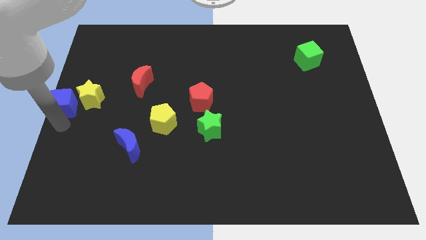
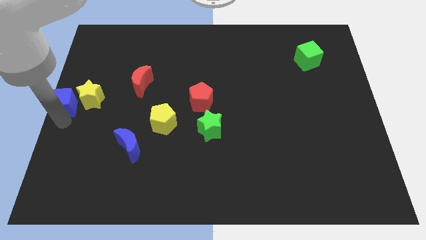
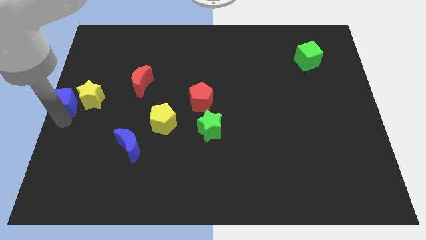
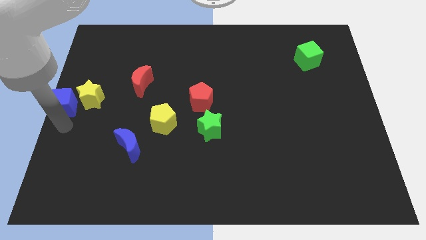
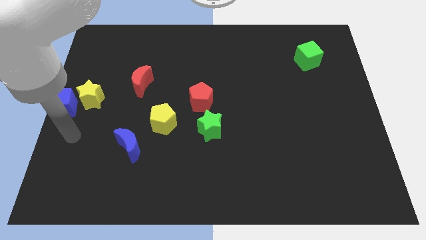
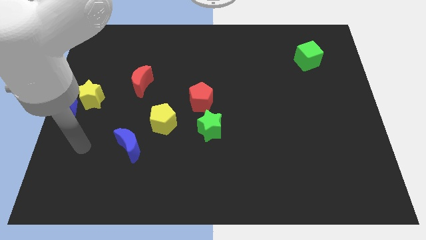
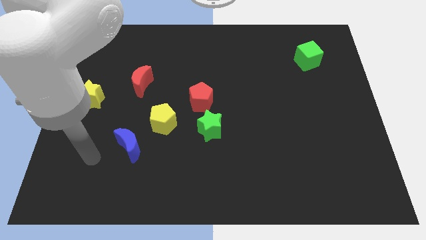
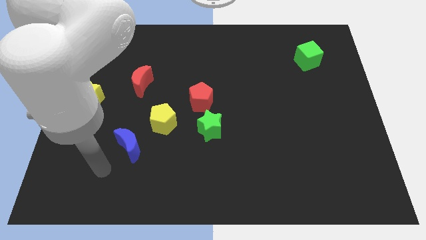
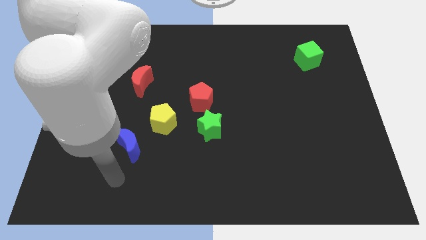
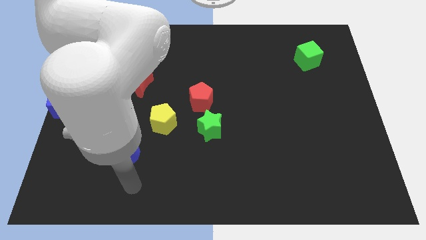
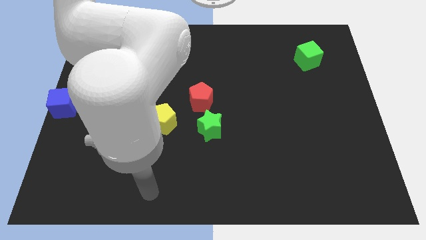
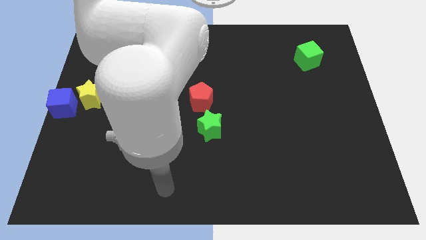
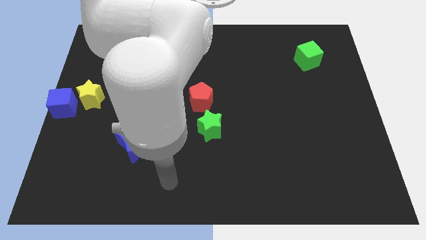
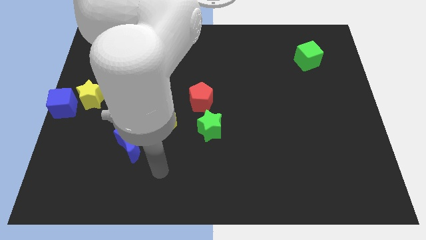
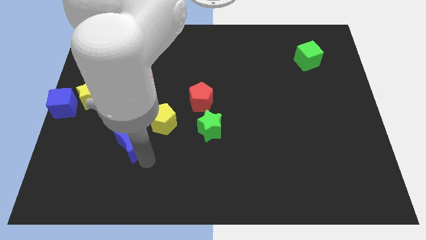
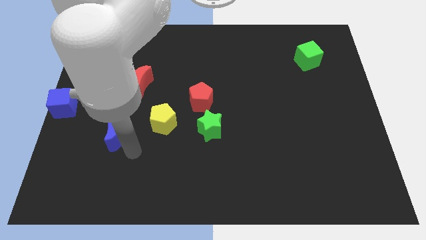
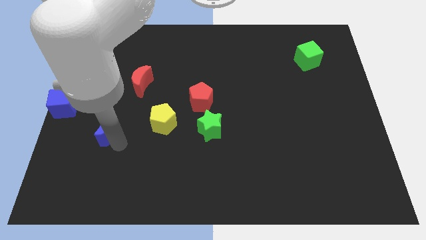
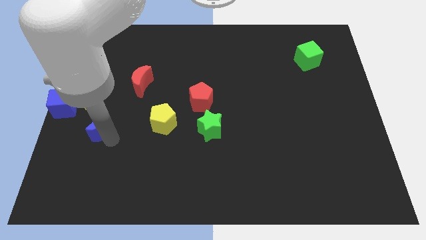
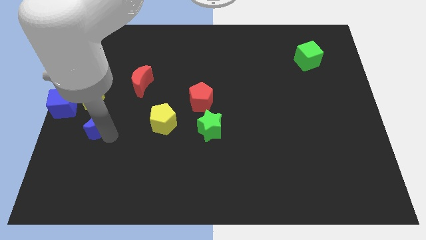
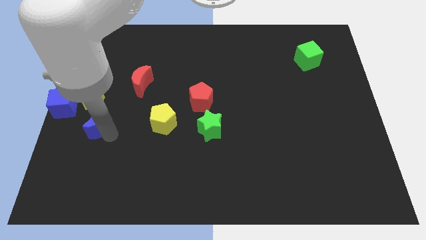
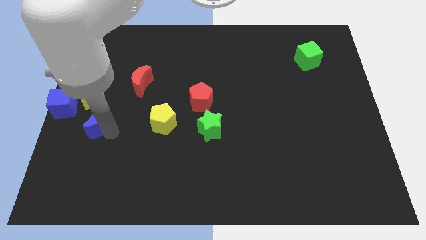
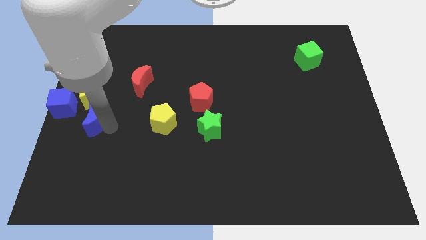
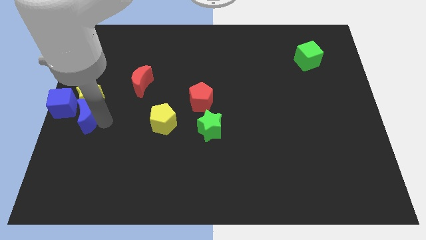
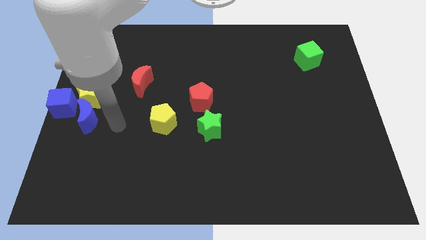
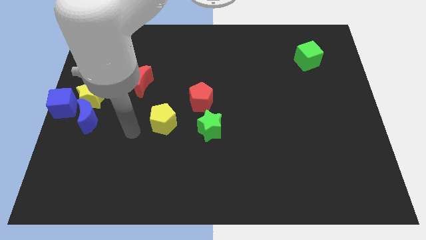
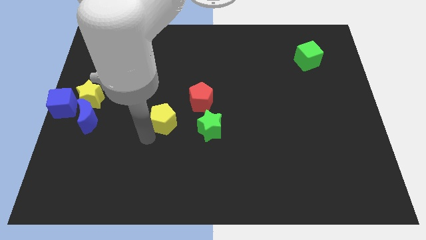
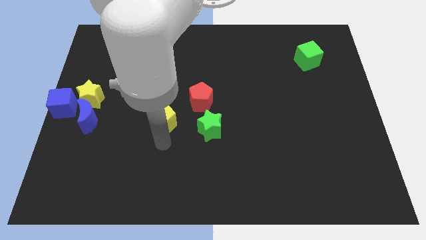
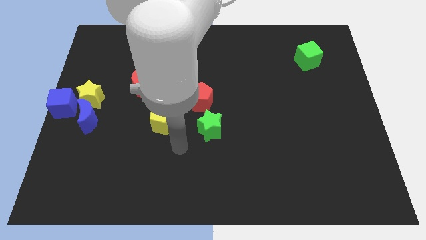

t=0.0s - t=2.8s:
place the blue crescent to the bottom right of the blue cube

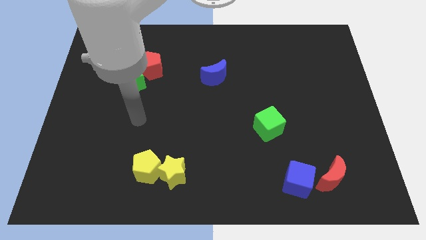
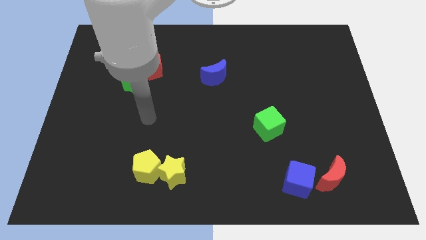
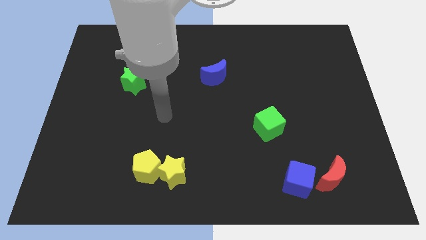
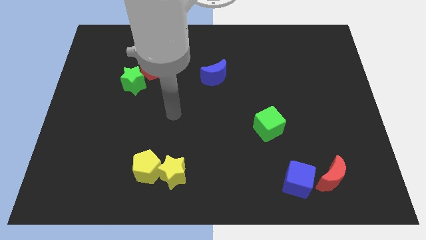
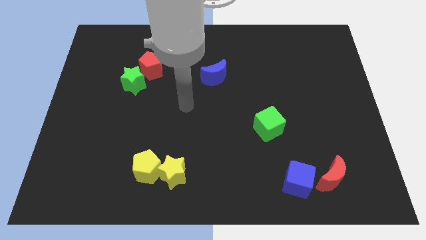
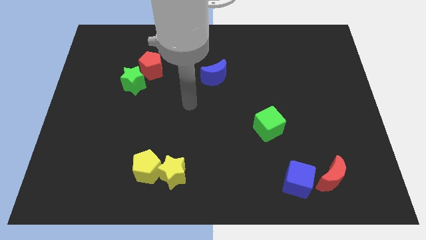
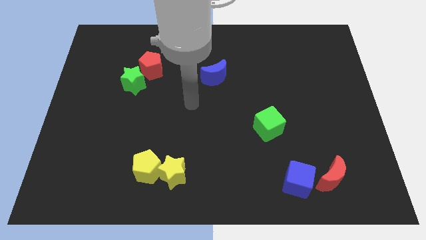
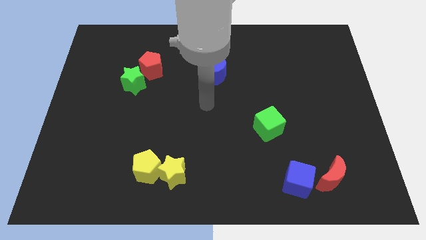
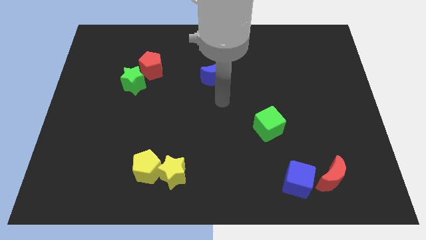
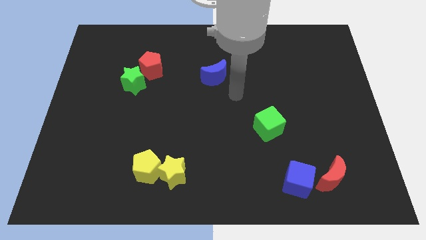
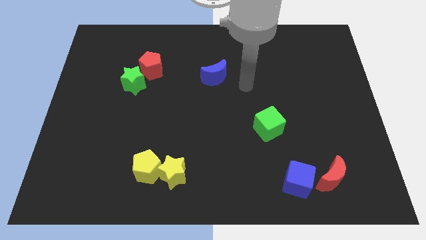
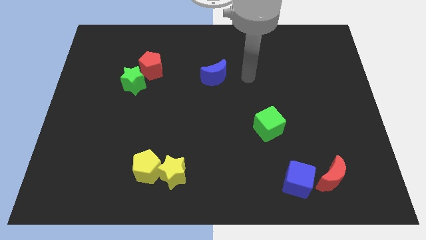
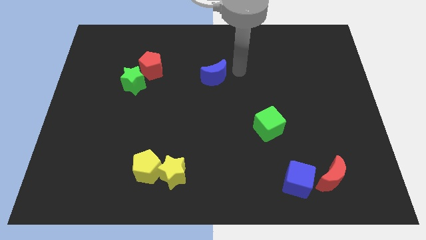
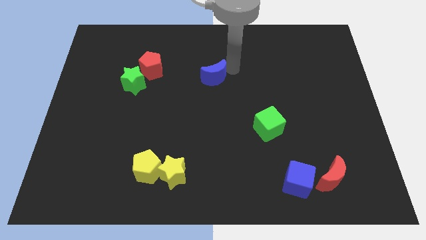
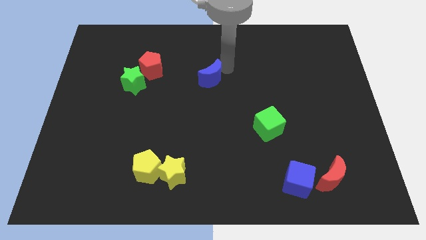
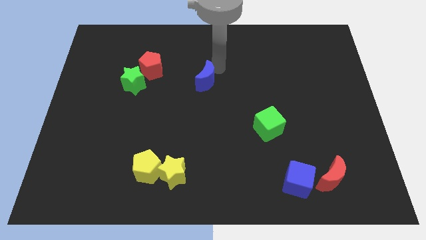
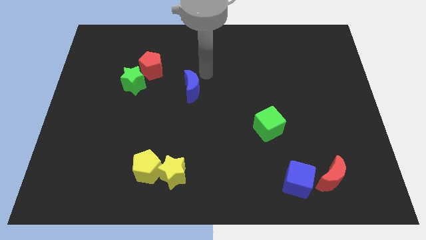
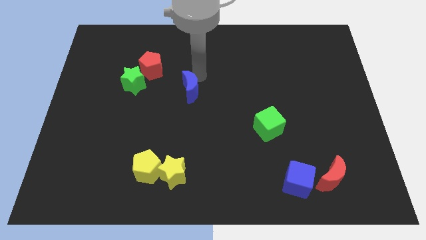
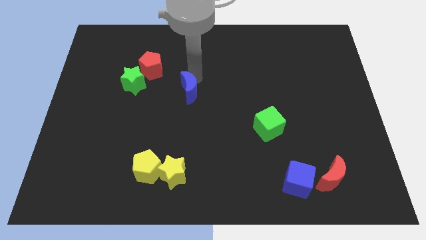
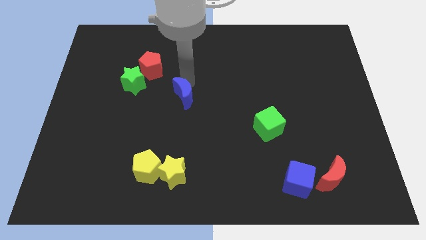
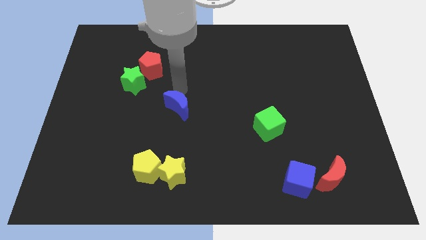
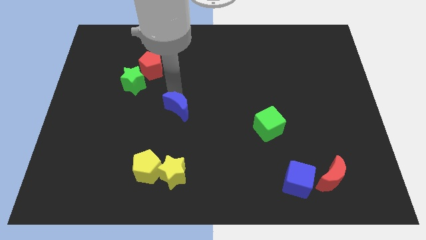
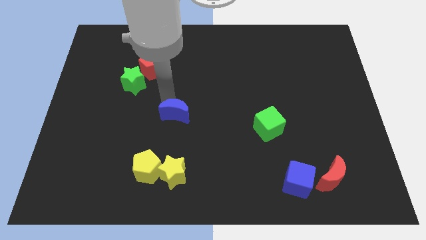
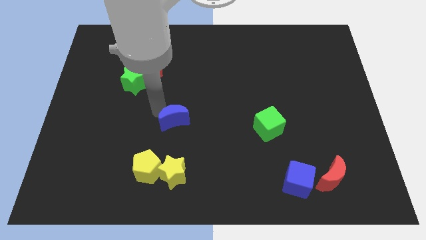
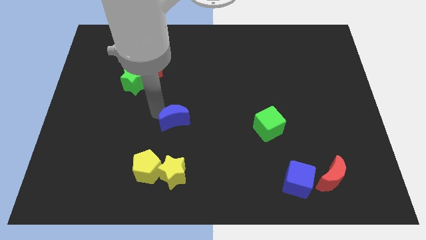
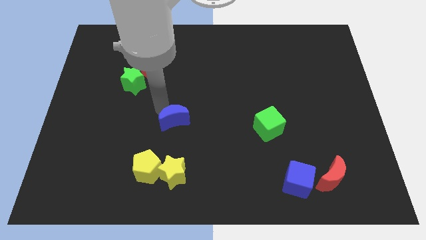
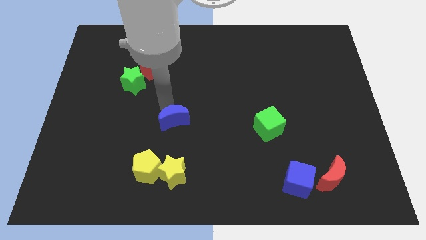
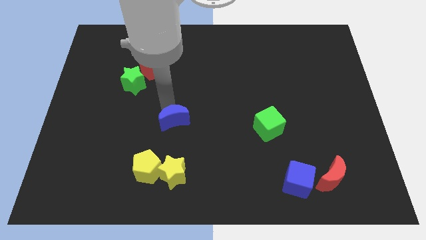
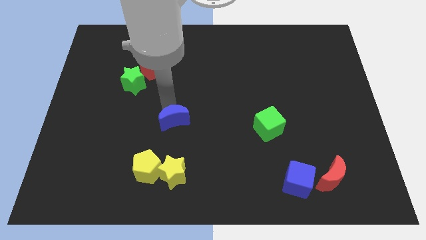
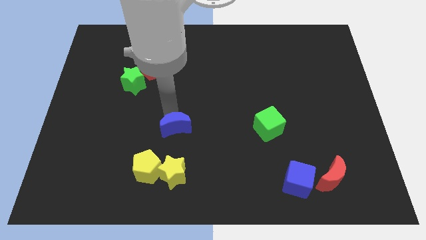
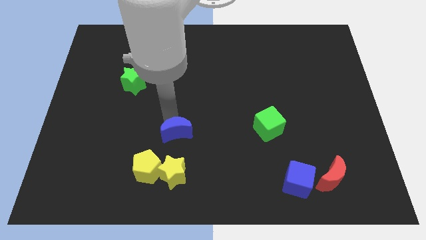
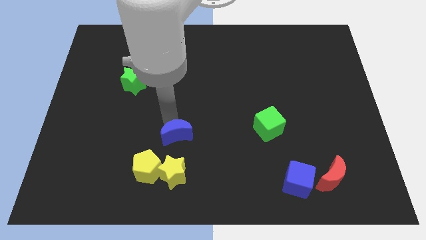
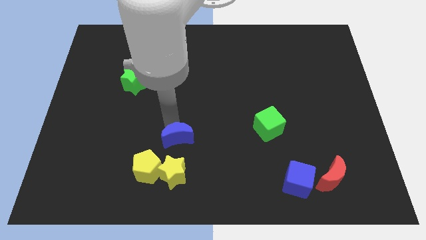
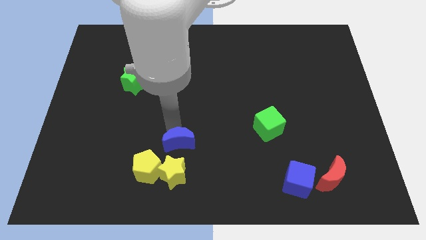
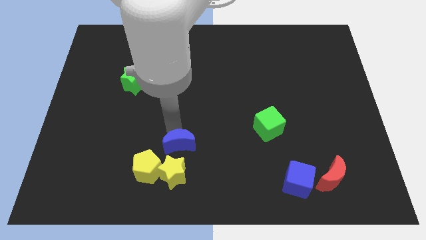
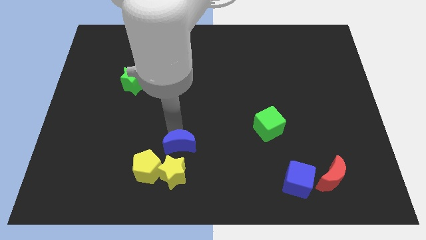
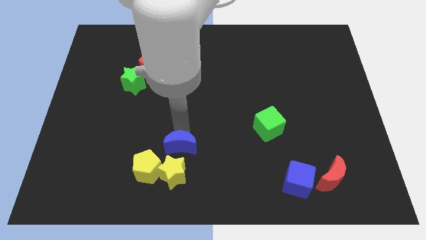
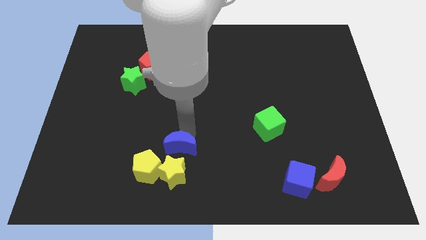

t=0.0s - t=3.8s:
place blue crescent above yellow star

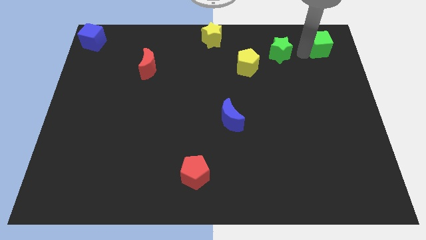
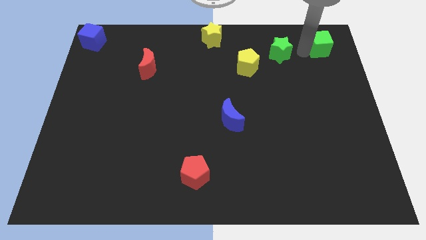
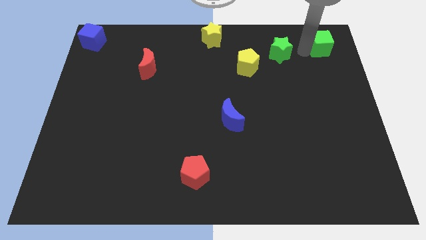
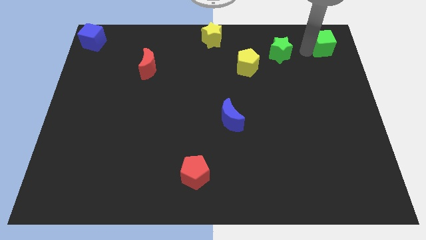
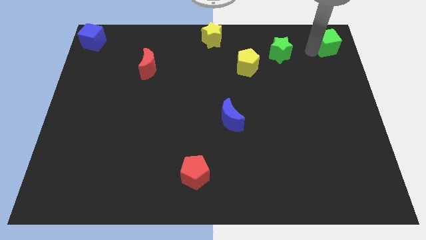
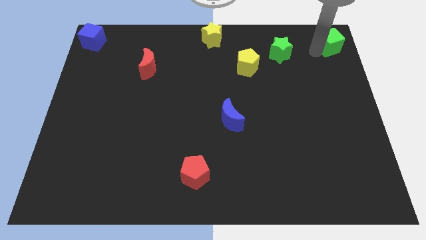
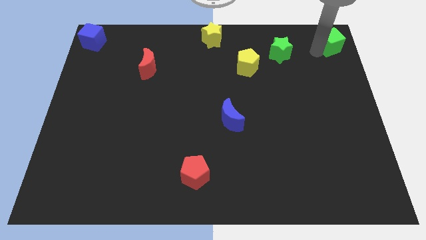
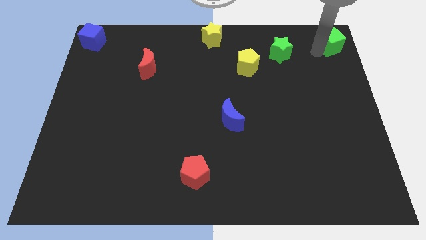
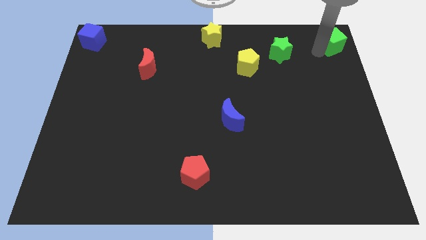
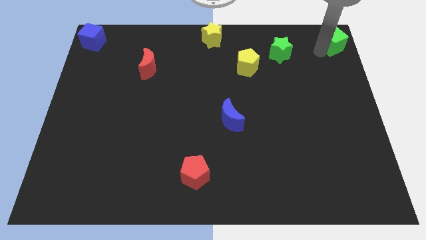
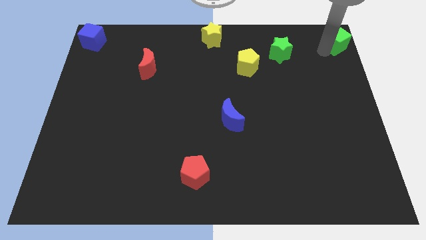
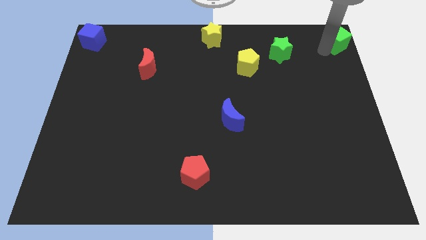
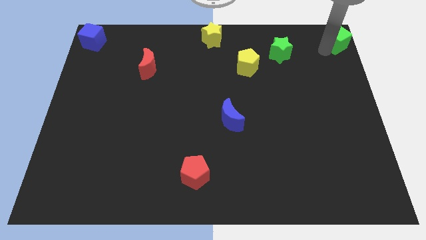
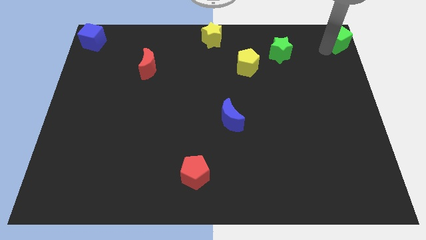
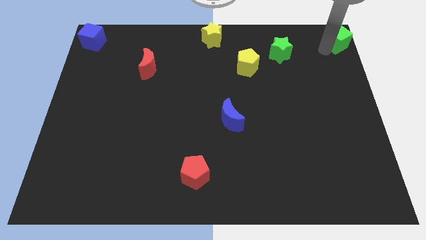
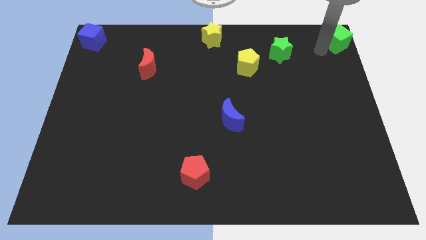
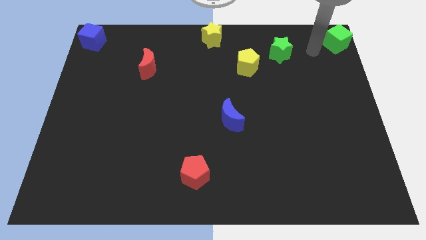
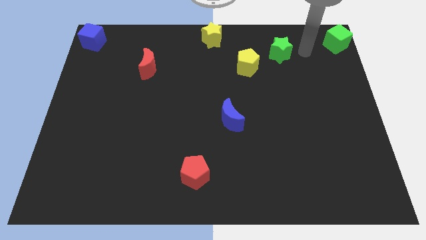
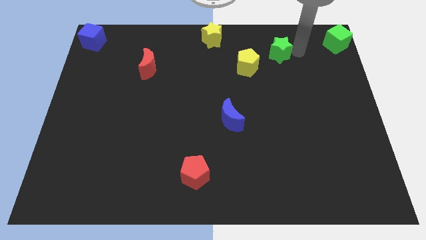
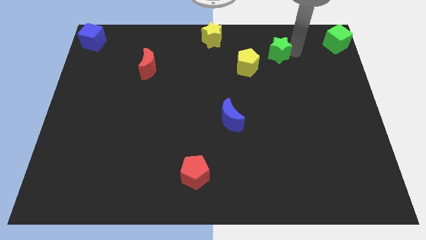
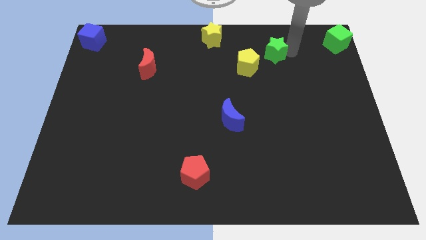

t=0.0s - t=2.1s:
place the green cube towards the left corner of the board

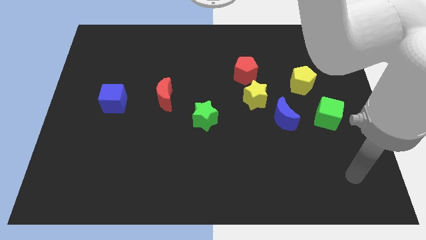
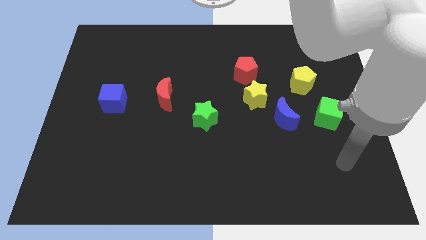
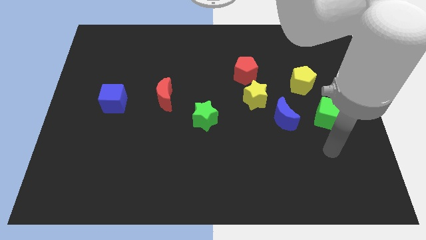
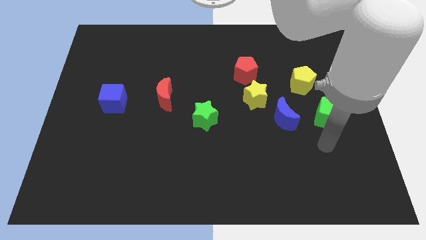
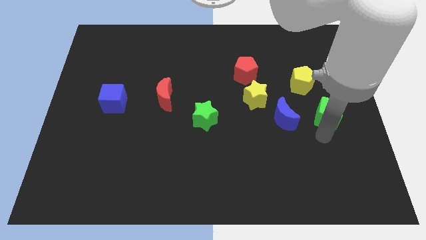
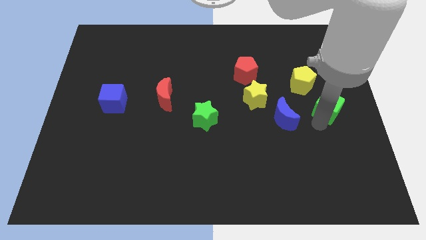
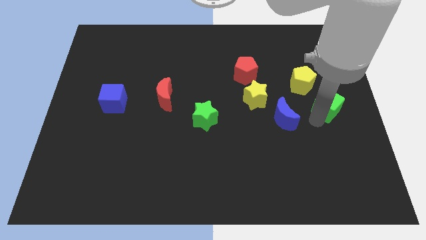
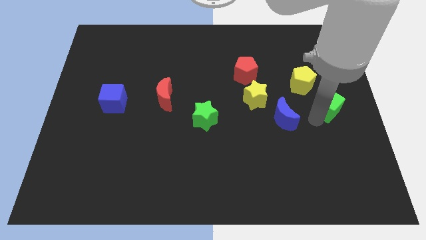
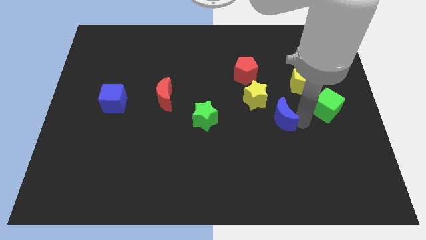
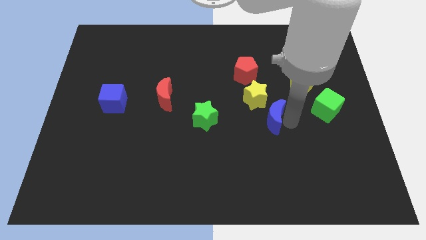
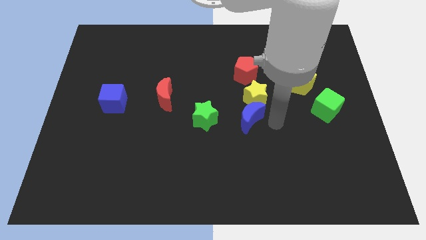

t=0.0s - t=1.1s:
push blue crescent below yellow star
